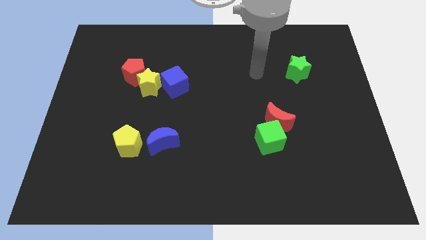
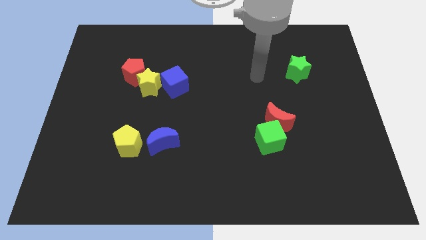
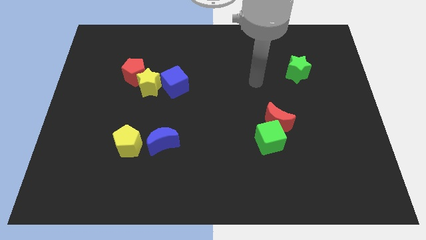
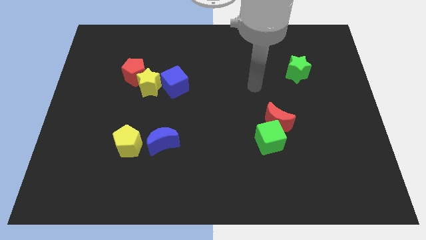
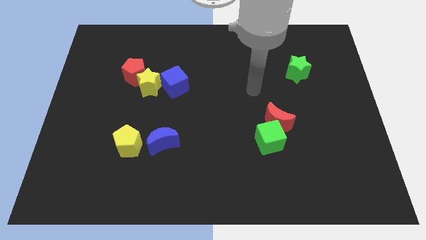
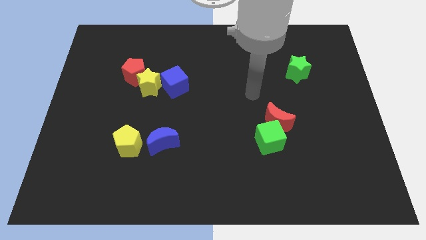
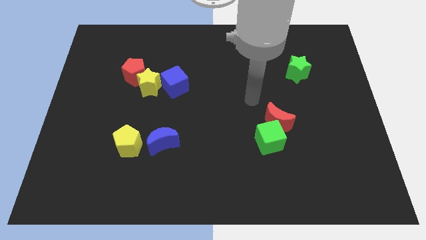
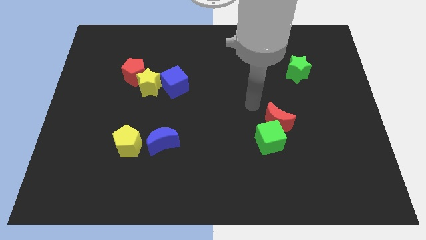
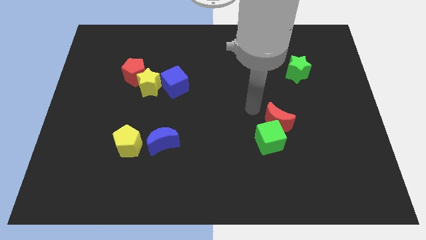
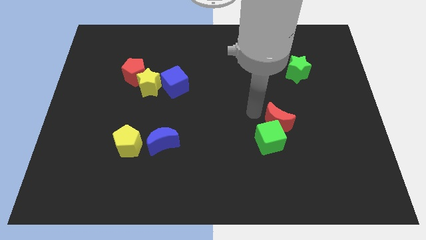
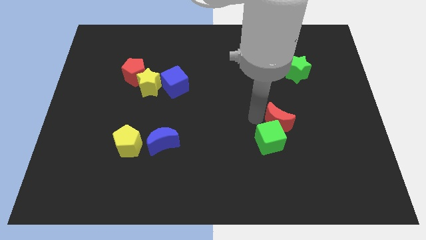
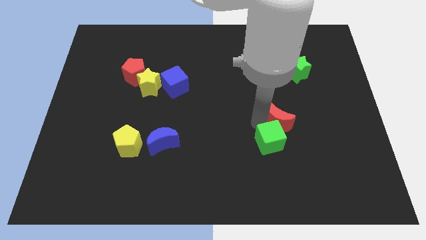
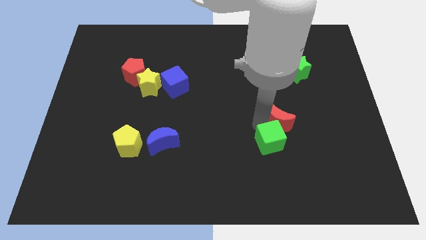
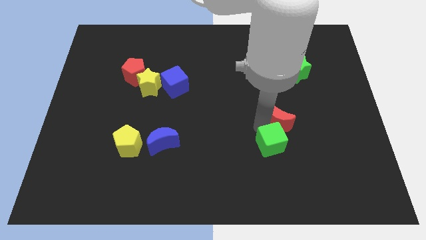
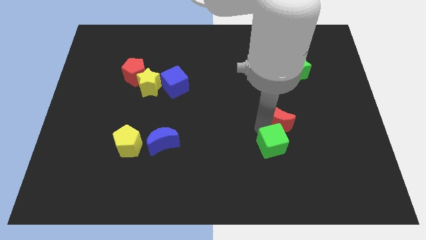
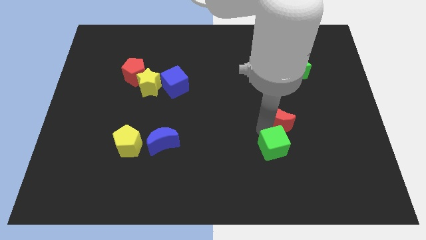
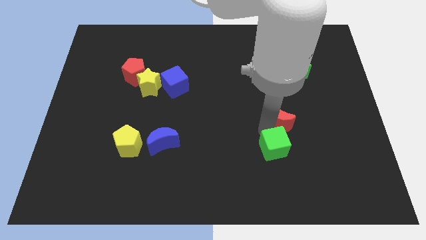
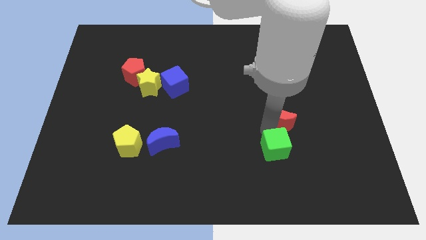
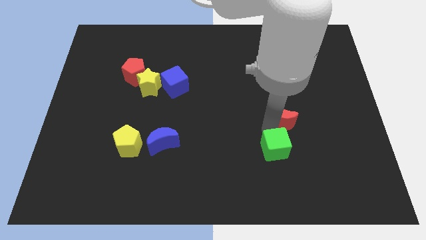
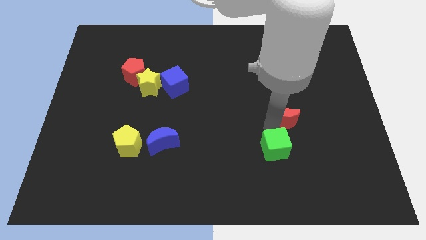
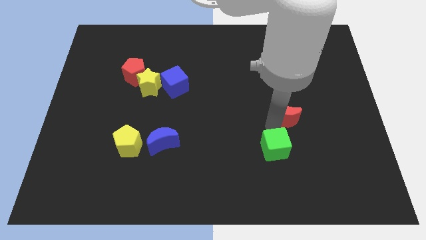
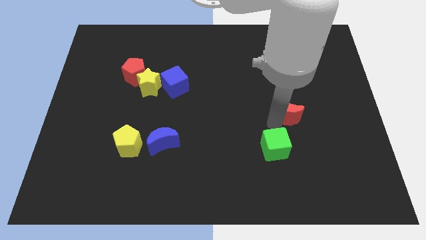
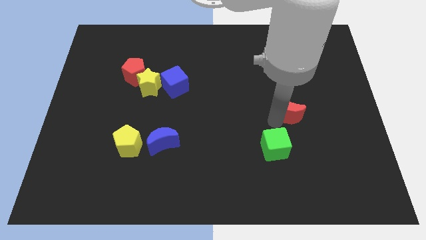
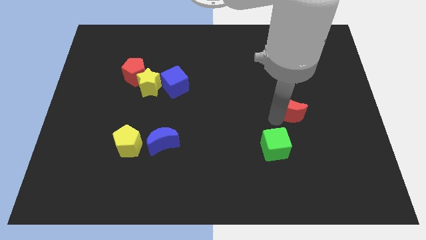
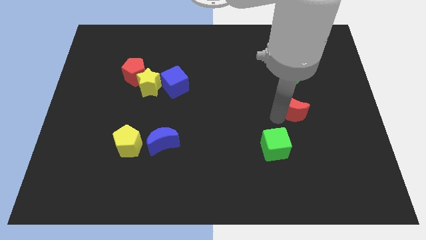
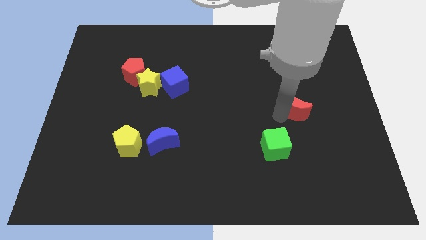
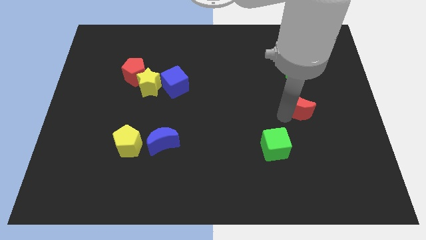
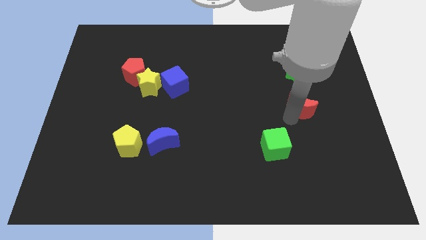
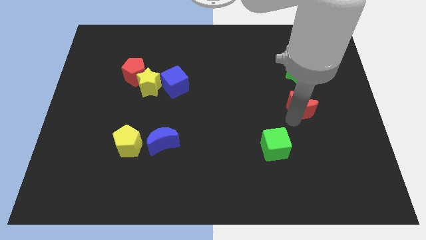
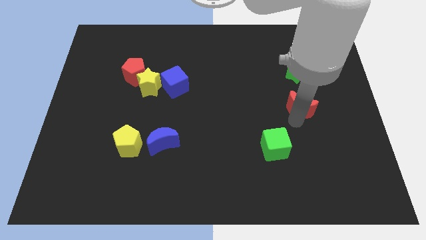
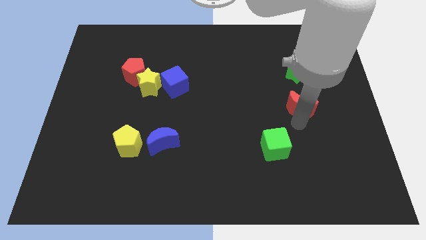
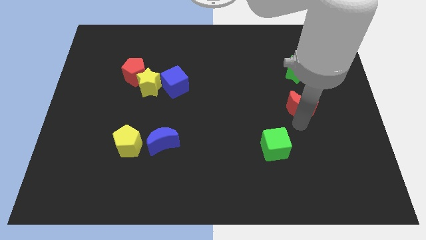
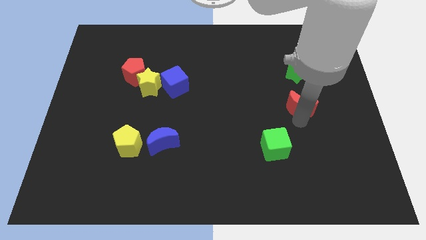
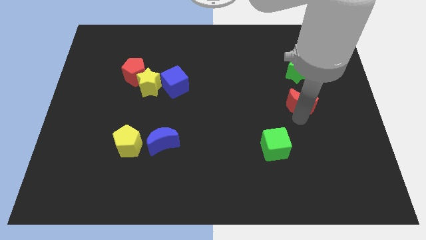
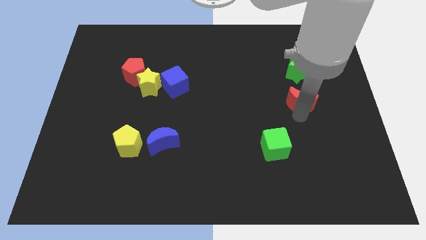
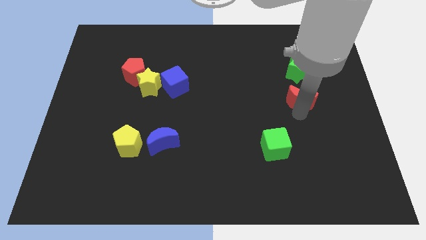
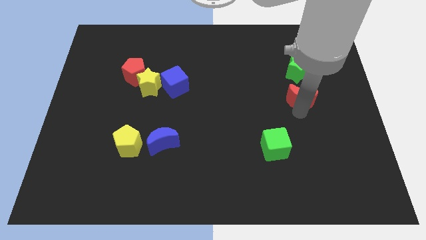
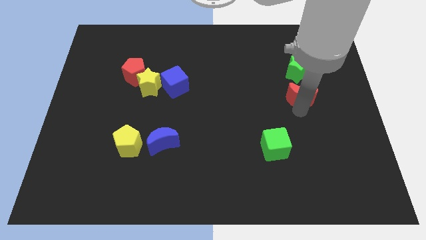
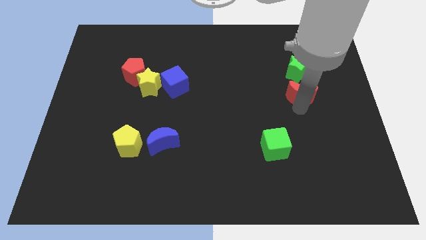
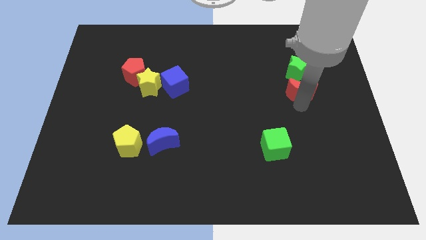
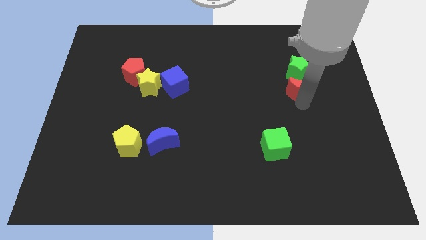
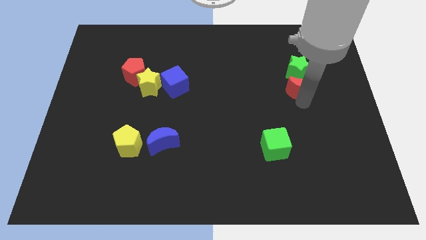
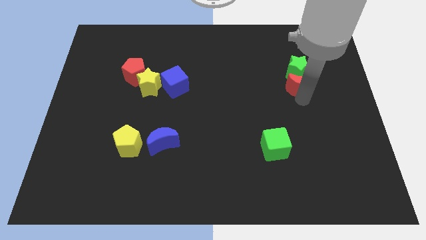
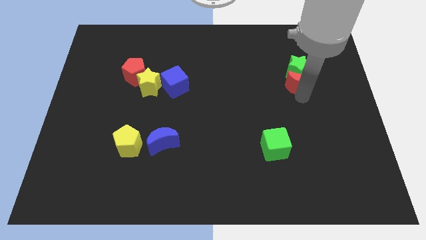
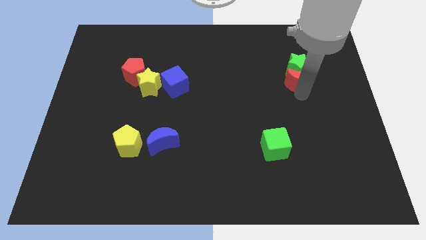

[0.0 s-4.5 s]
push the red moon to the green star

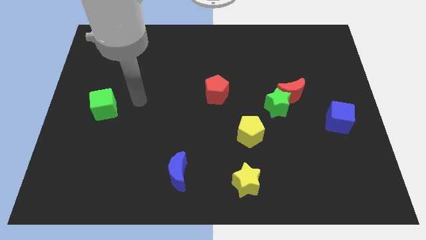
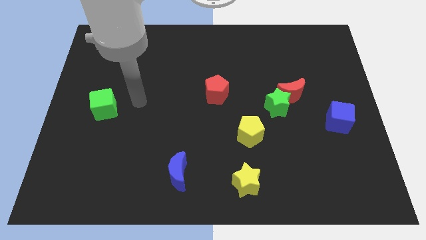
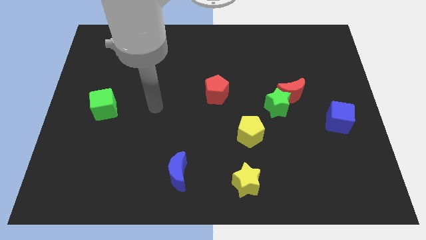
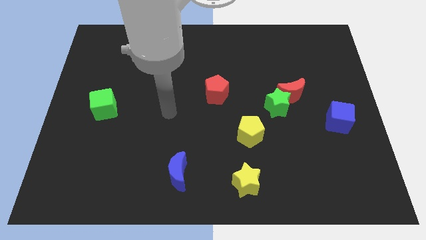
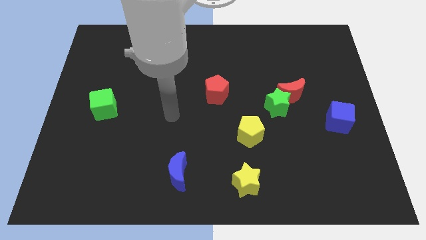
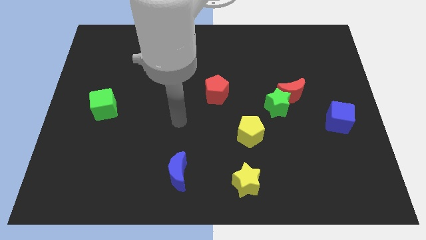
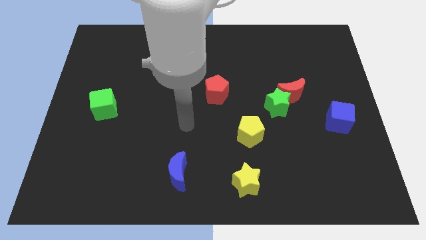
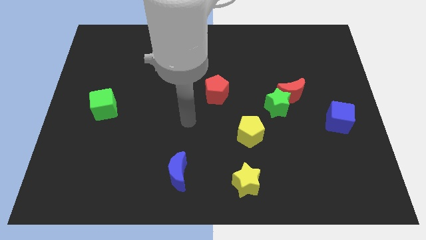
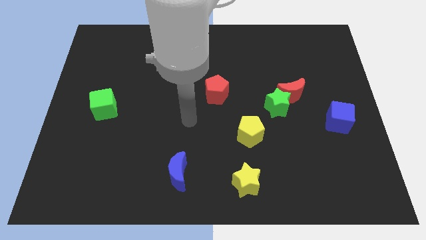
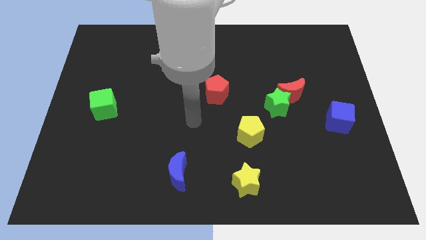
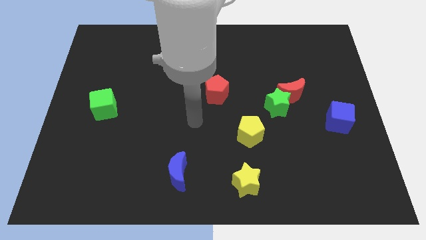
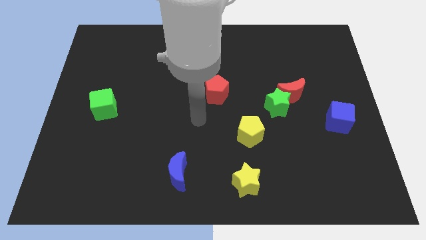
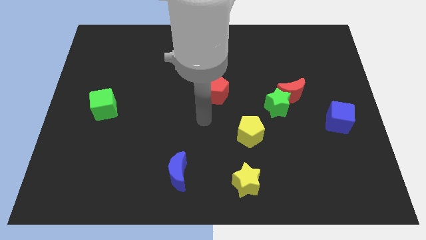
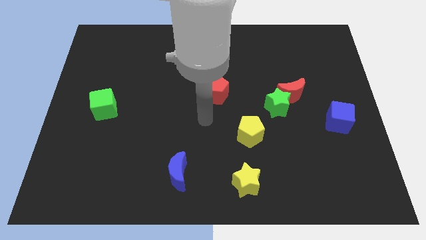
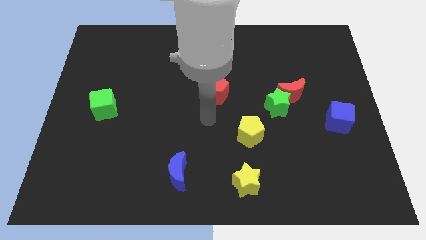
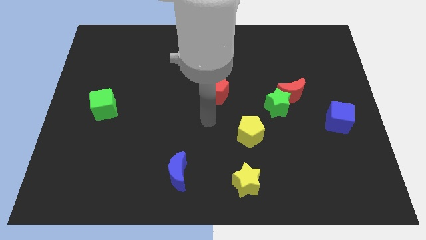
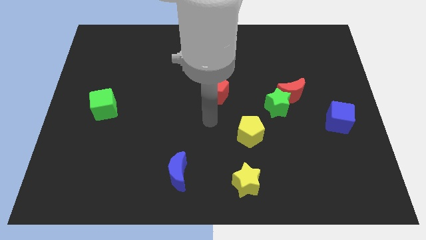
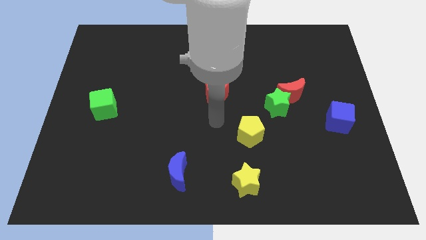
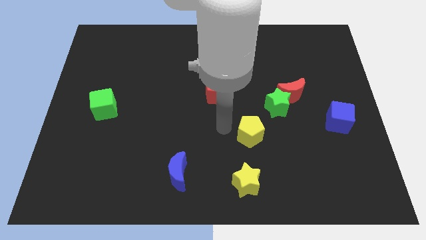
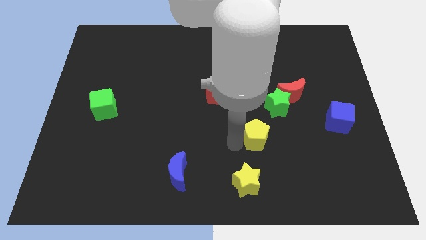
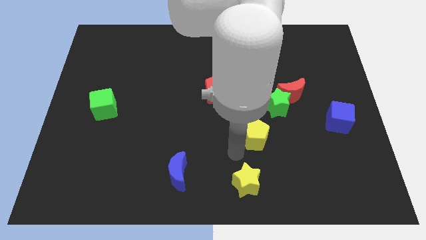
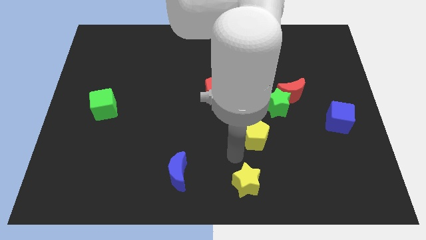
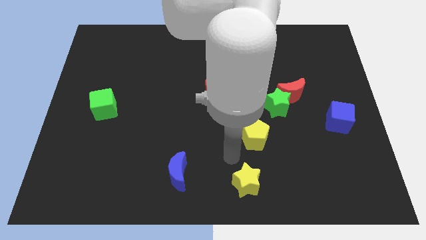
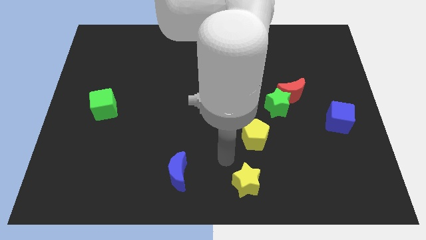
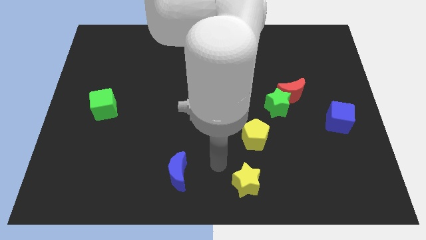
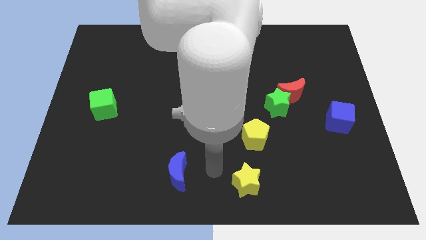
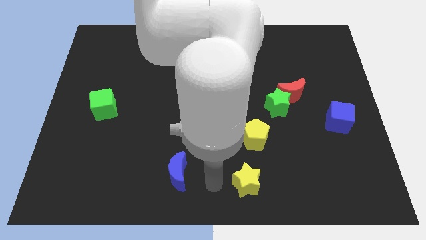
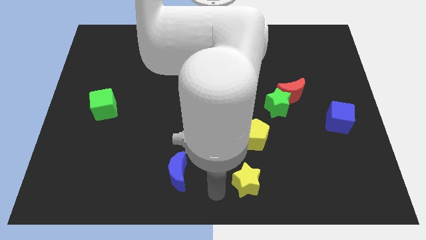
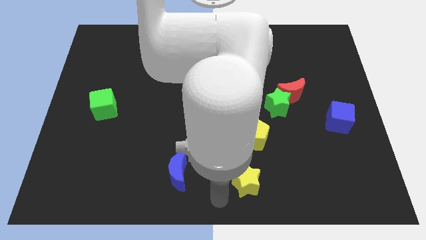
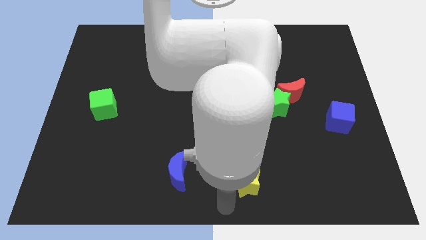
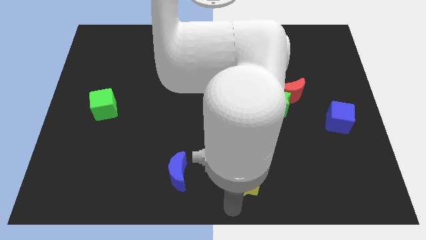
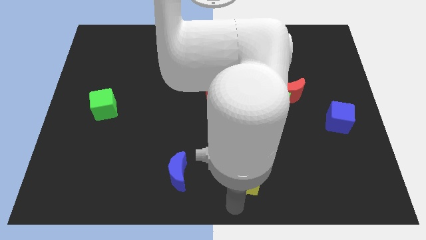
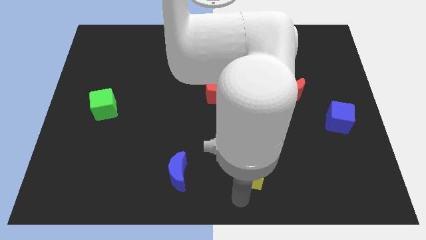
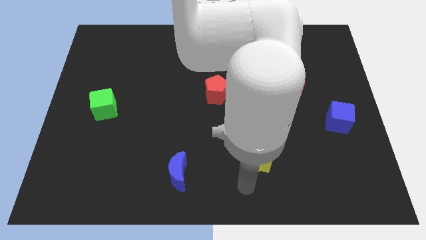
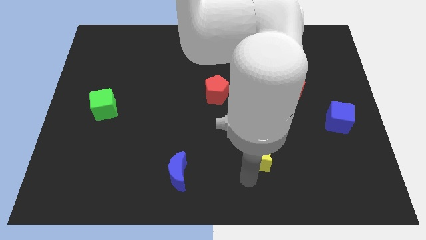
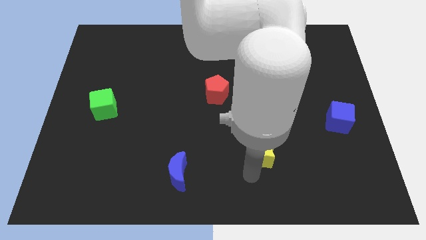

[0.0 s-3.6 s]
slide the yellow star next to the yellow pentagon

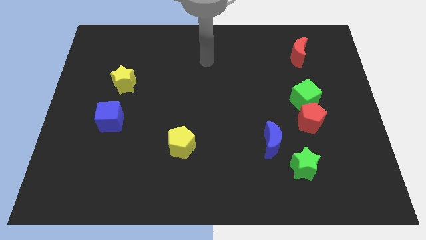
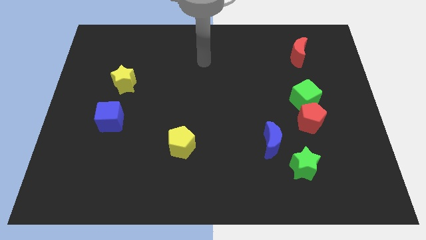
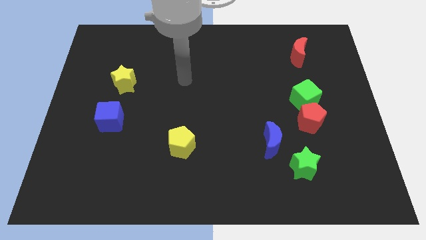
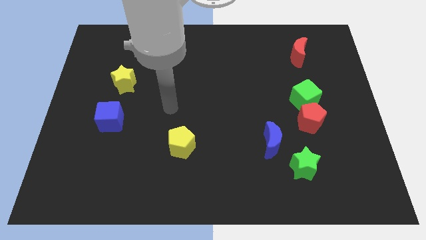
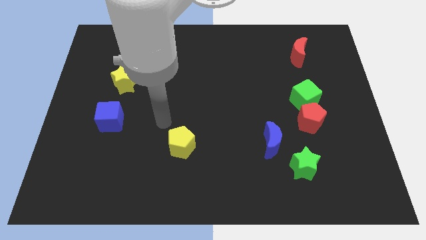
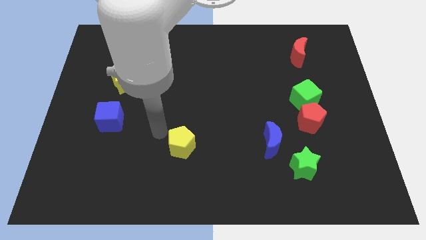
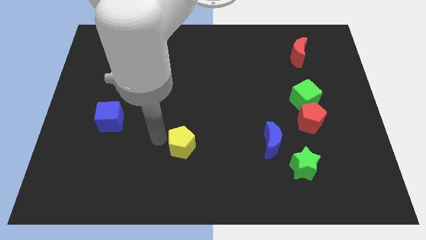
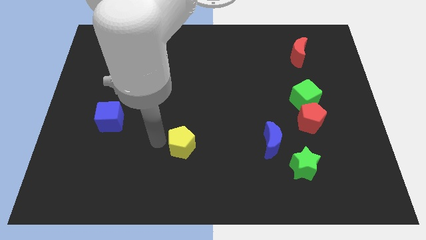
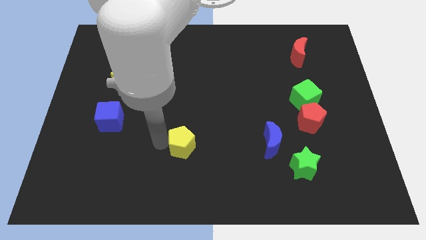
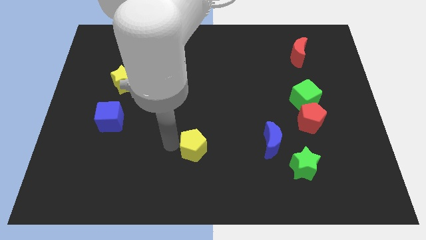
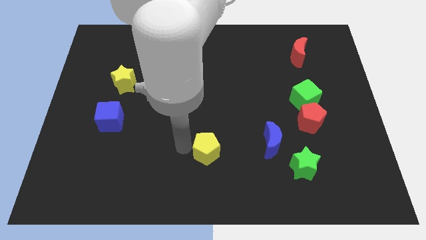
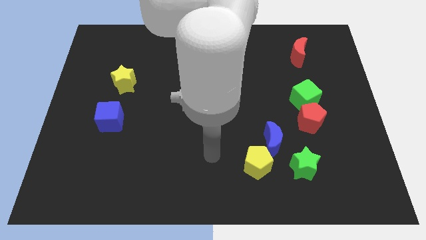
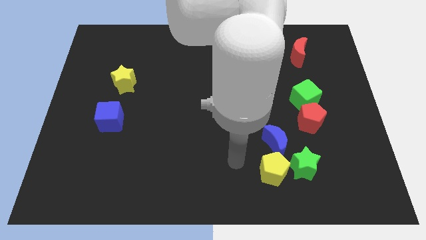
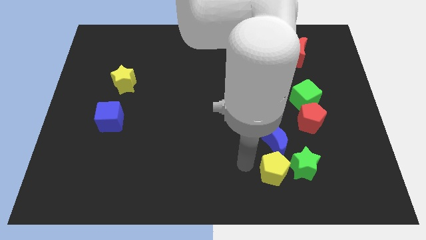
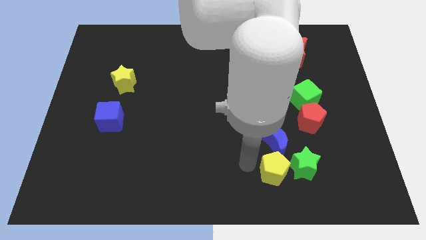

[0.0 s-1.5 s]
put the yellow pentagon close to the green star
